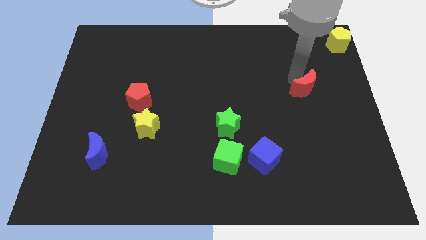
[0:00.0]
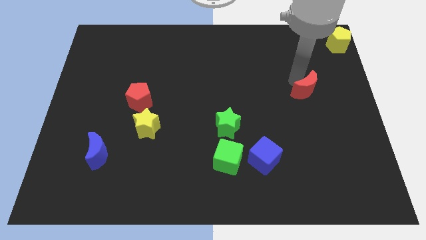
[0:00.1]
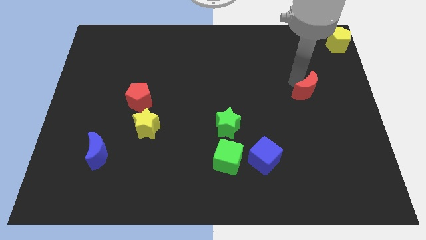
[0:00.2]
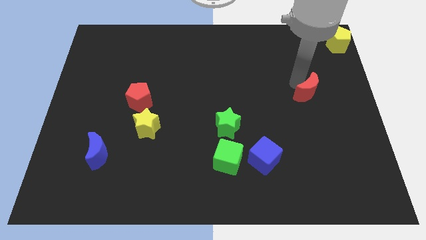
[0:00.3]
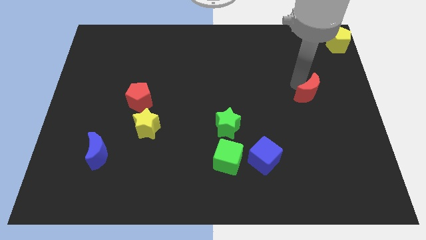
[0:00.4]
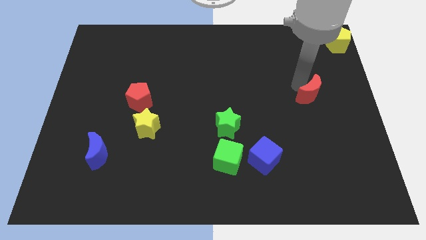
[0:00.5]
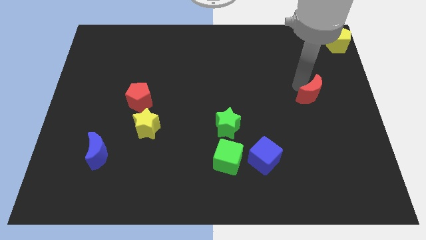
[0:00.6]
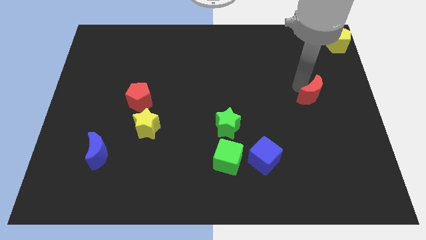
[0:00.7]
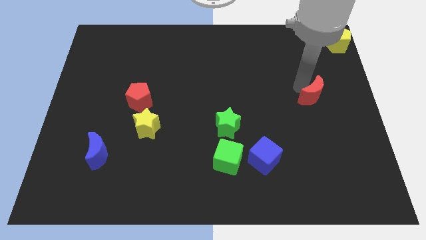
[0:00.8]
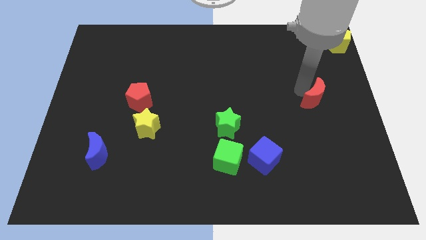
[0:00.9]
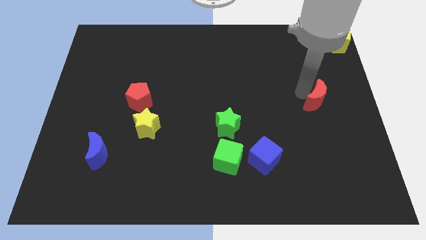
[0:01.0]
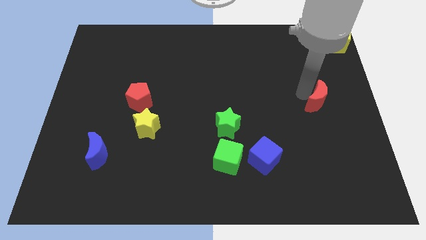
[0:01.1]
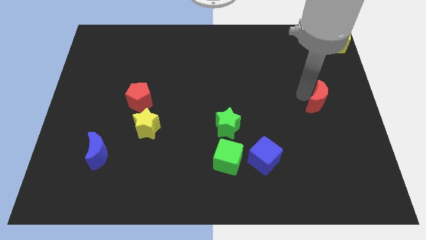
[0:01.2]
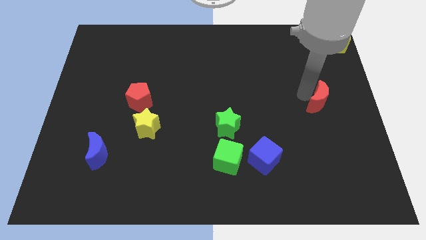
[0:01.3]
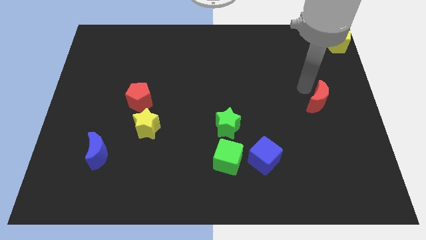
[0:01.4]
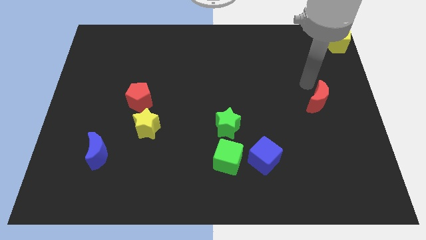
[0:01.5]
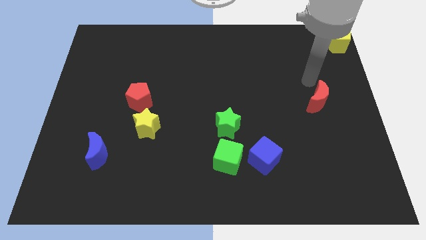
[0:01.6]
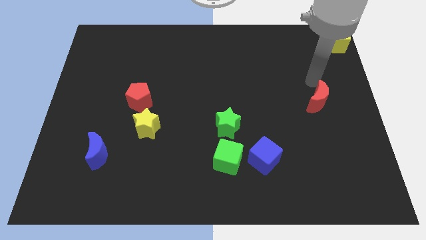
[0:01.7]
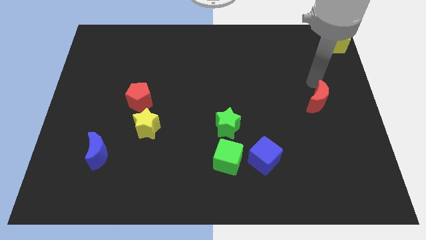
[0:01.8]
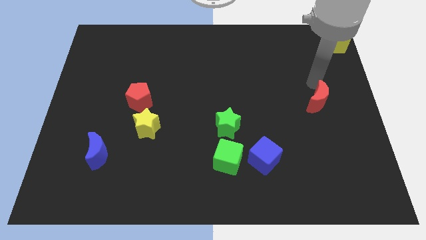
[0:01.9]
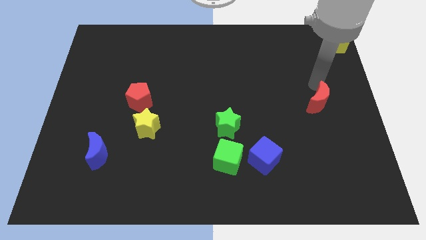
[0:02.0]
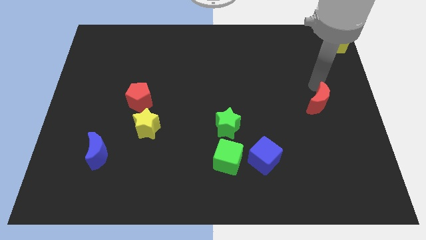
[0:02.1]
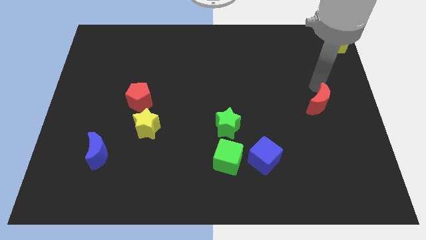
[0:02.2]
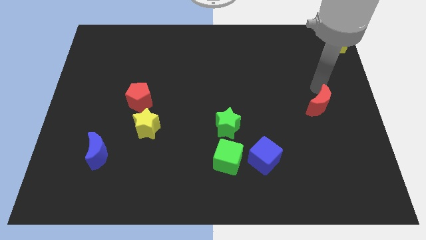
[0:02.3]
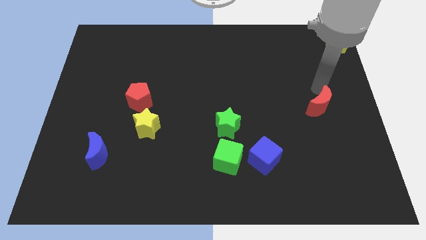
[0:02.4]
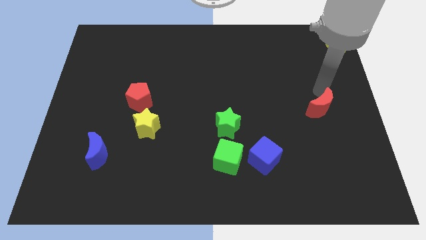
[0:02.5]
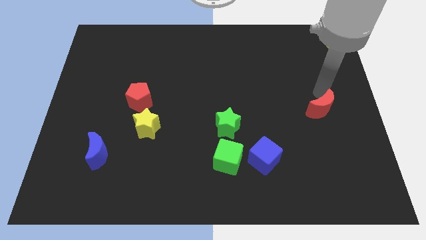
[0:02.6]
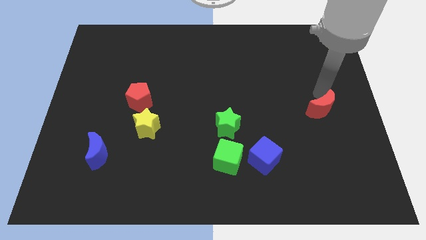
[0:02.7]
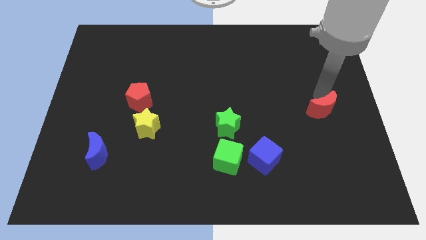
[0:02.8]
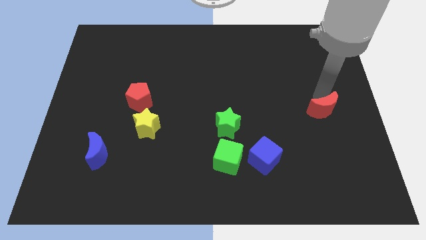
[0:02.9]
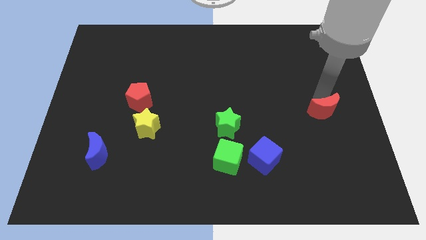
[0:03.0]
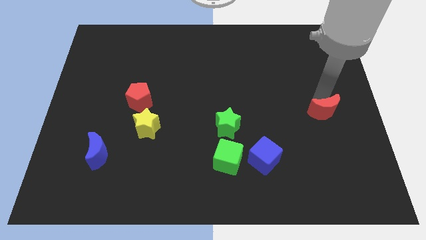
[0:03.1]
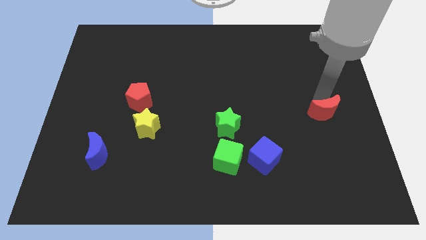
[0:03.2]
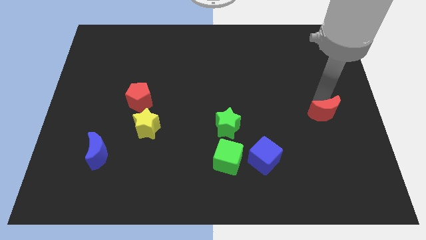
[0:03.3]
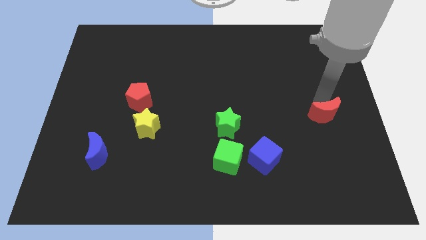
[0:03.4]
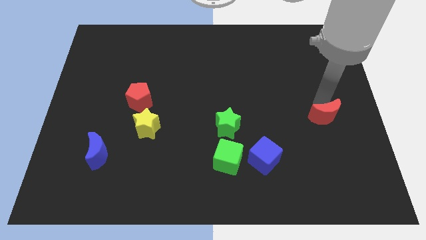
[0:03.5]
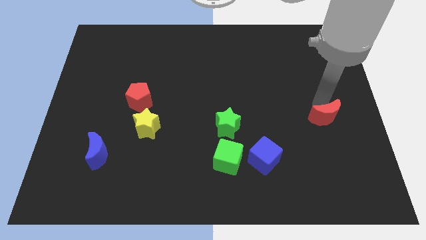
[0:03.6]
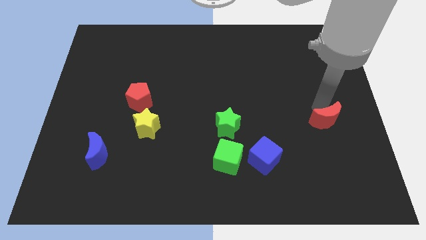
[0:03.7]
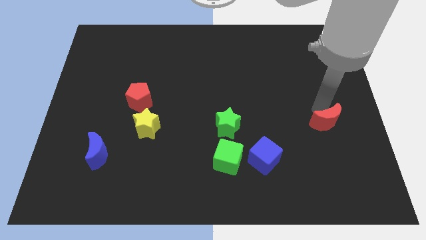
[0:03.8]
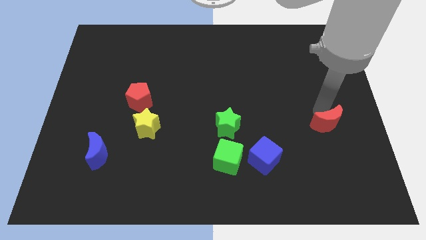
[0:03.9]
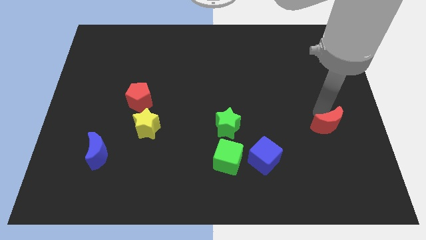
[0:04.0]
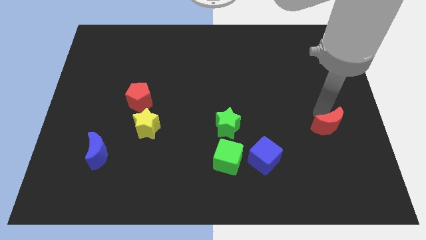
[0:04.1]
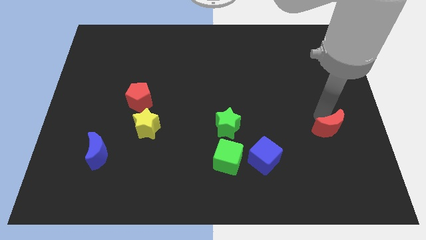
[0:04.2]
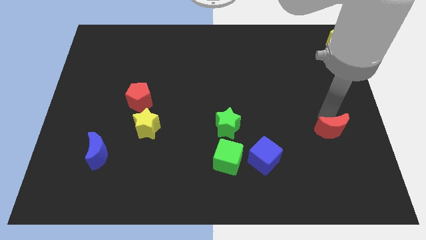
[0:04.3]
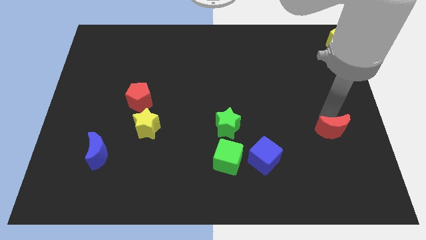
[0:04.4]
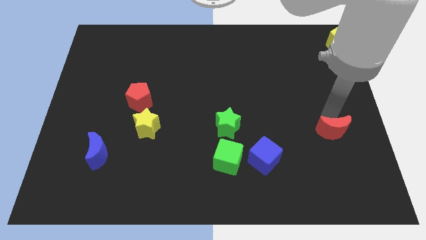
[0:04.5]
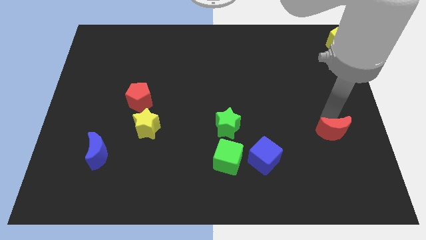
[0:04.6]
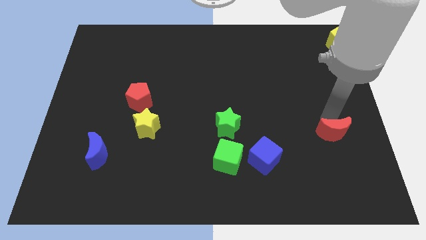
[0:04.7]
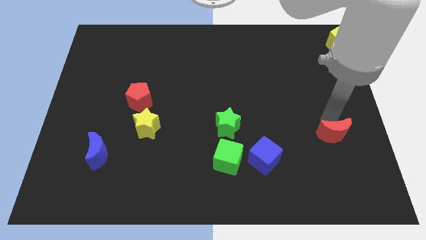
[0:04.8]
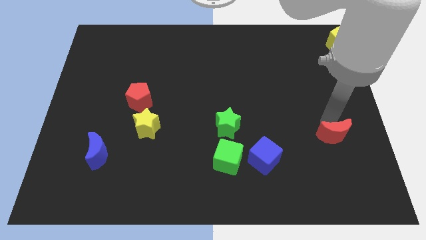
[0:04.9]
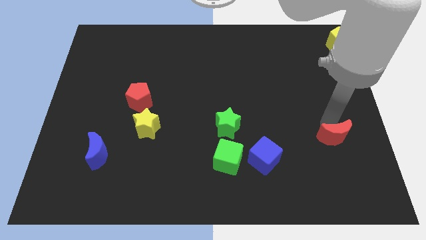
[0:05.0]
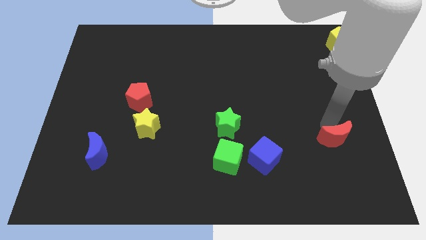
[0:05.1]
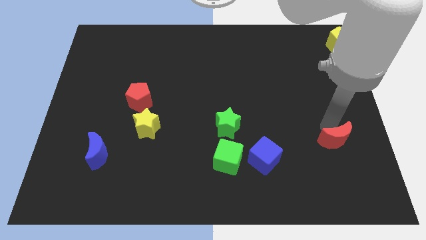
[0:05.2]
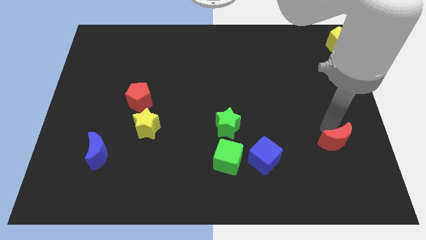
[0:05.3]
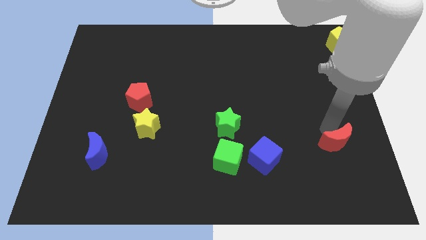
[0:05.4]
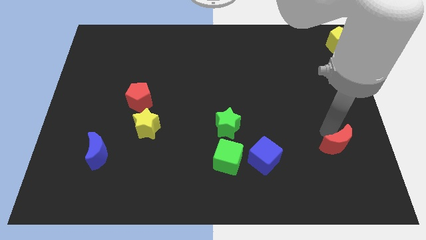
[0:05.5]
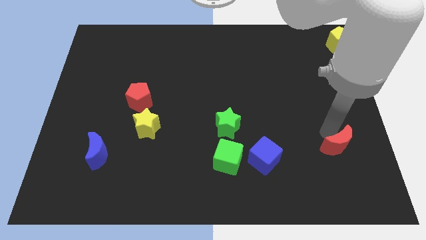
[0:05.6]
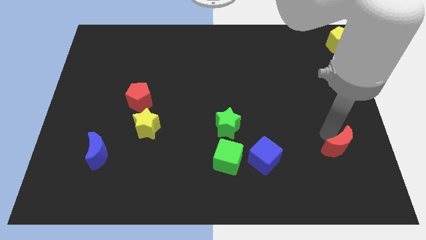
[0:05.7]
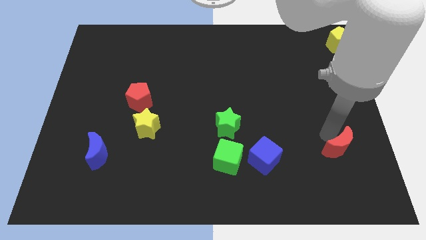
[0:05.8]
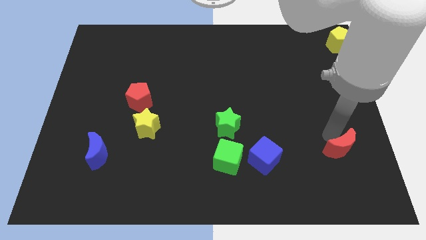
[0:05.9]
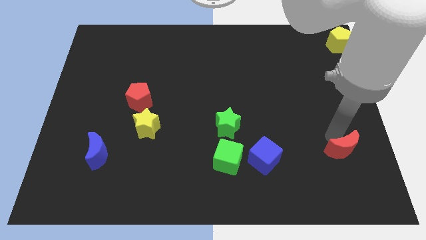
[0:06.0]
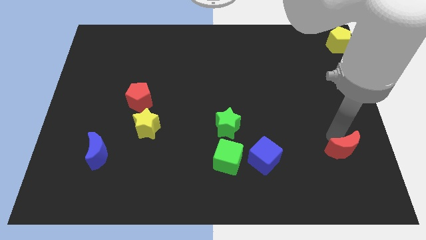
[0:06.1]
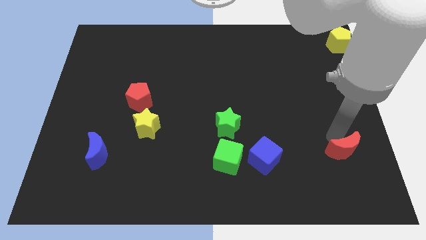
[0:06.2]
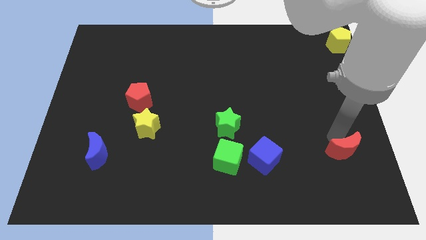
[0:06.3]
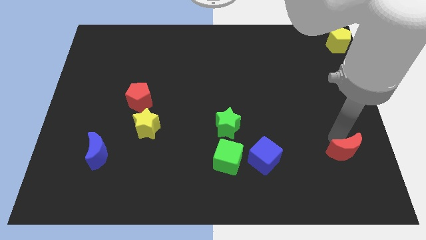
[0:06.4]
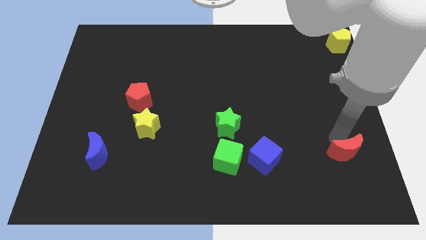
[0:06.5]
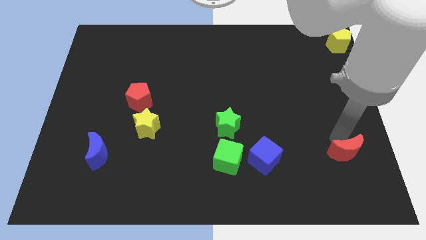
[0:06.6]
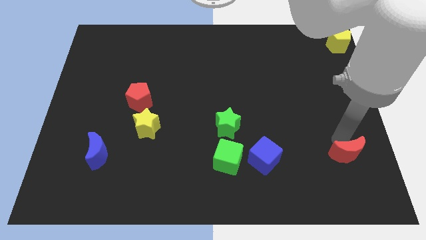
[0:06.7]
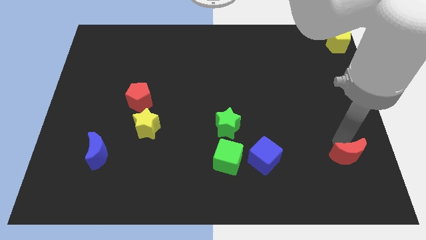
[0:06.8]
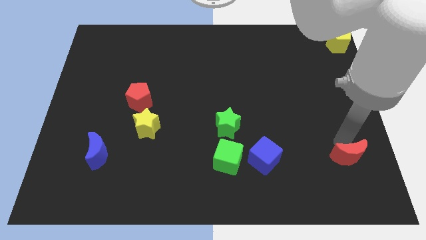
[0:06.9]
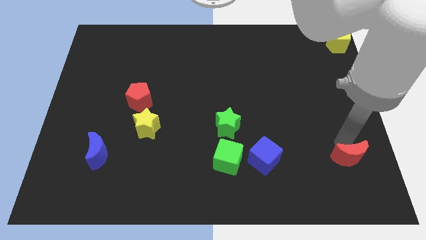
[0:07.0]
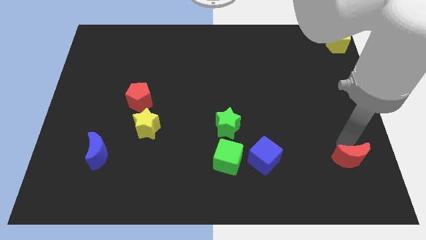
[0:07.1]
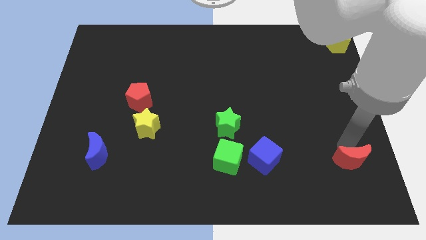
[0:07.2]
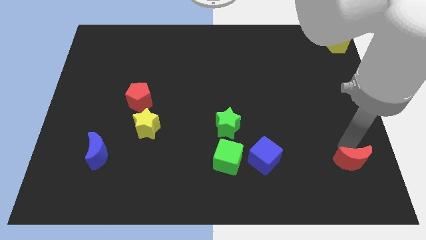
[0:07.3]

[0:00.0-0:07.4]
move the red crescent to the right of the blue cube

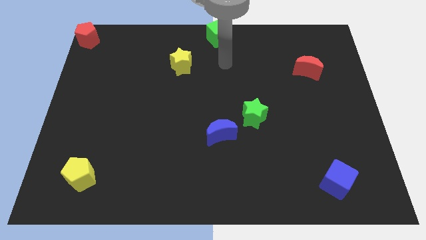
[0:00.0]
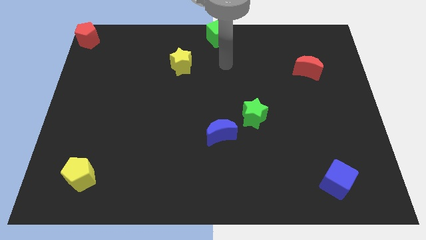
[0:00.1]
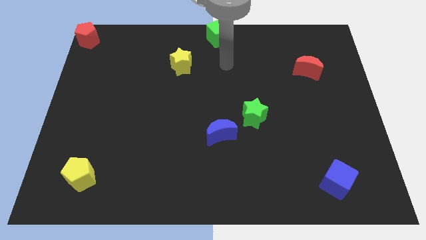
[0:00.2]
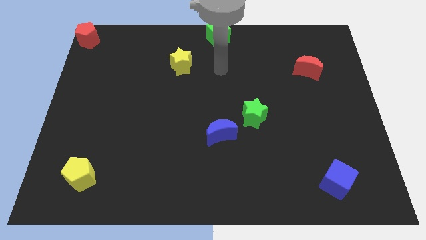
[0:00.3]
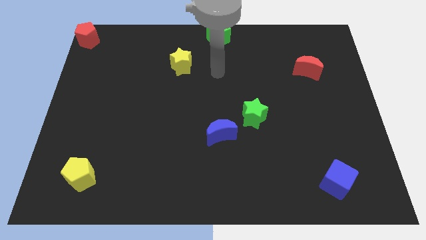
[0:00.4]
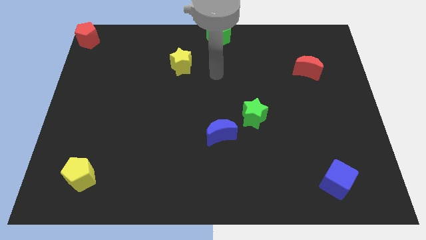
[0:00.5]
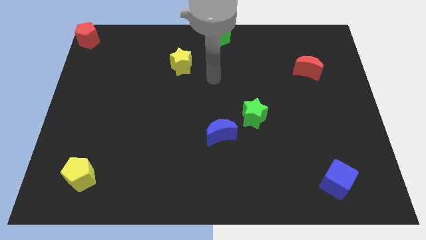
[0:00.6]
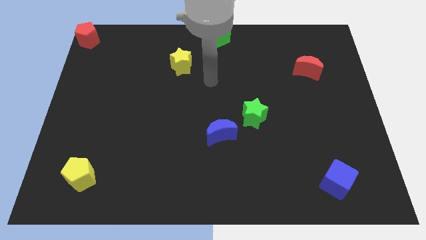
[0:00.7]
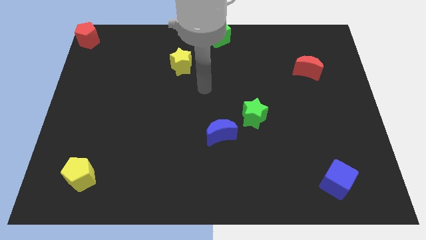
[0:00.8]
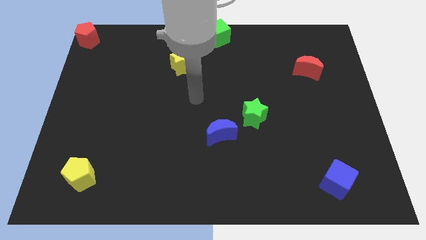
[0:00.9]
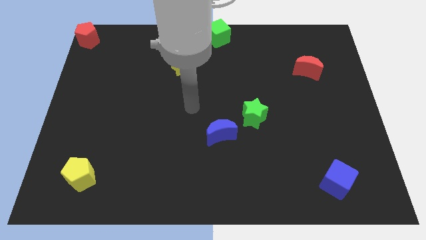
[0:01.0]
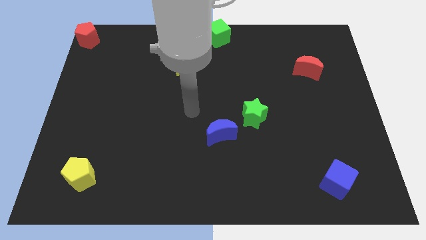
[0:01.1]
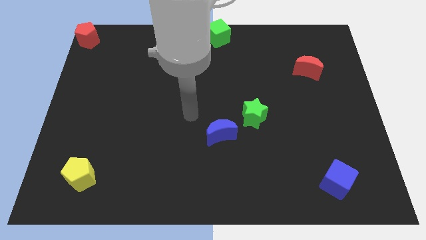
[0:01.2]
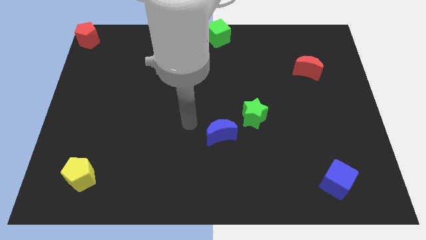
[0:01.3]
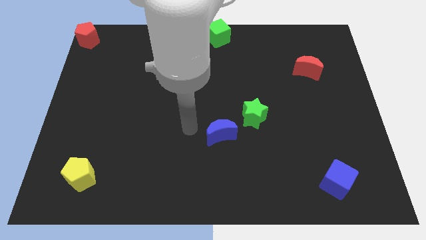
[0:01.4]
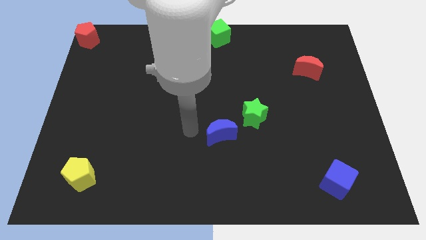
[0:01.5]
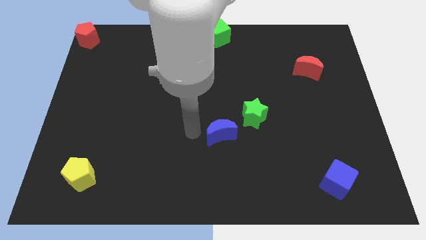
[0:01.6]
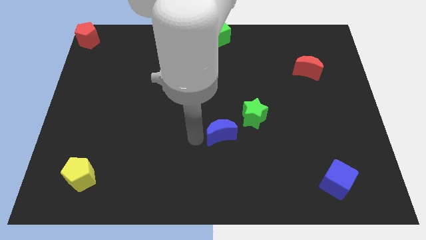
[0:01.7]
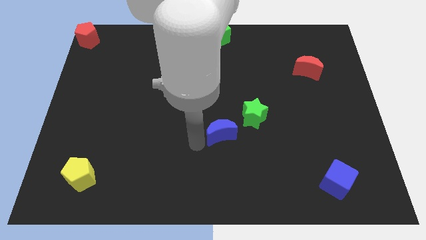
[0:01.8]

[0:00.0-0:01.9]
move the arm towards the left side of the blue moon
